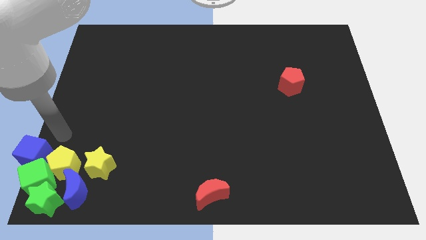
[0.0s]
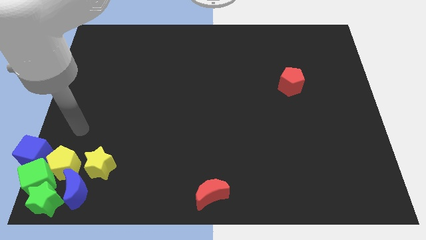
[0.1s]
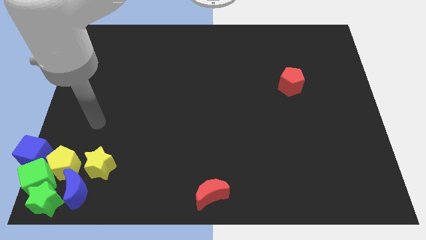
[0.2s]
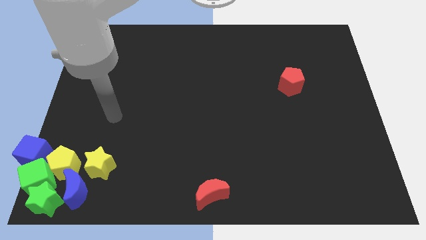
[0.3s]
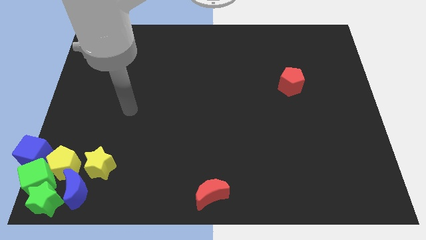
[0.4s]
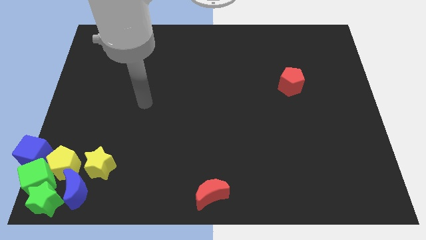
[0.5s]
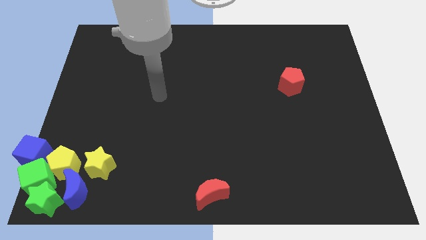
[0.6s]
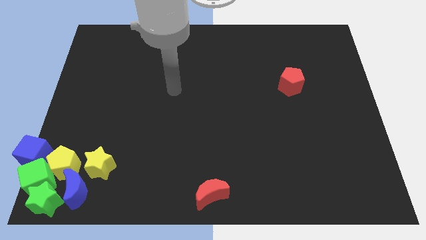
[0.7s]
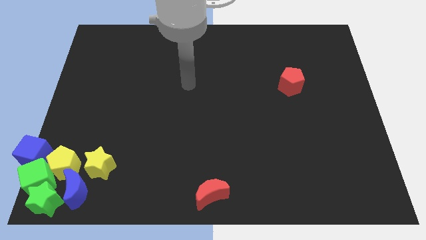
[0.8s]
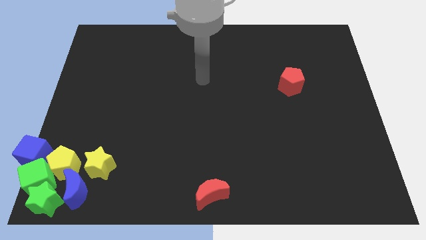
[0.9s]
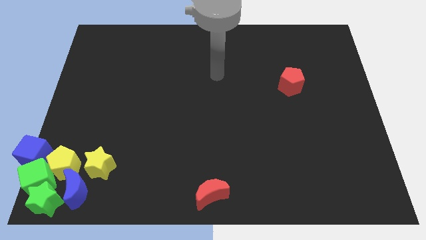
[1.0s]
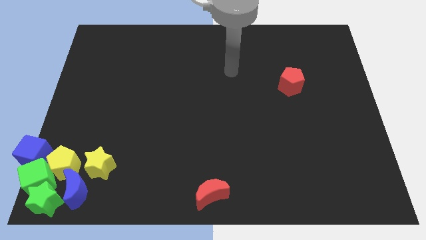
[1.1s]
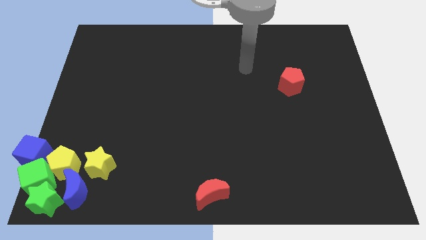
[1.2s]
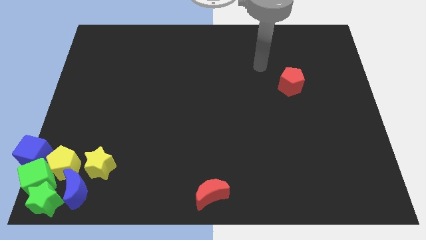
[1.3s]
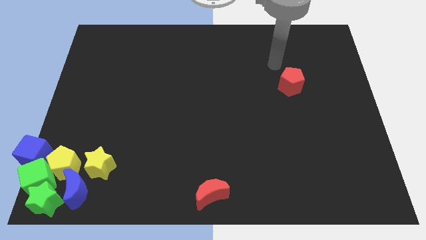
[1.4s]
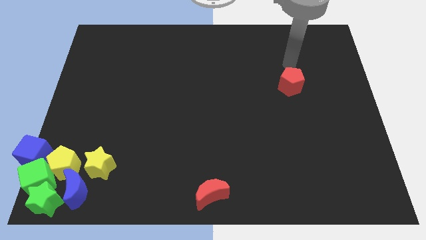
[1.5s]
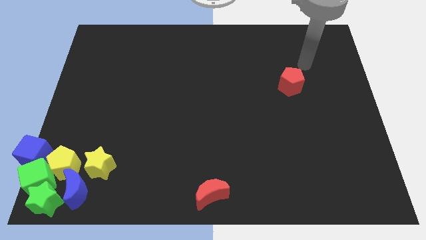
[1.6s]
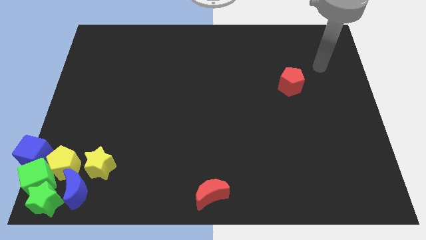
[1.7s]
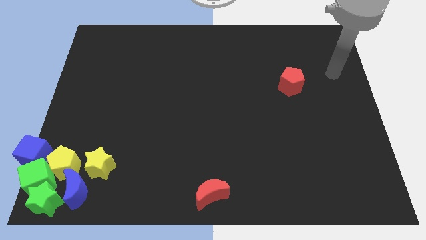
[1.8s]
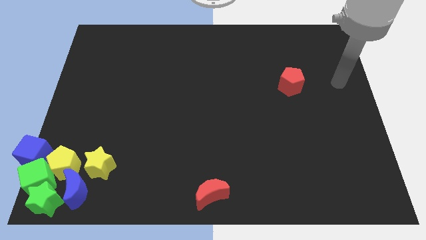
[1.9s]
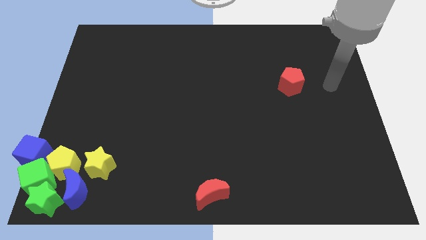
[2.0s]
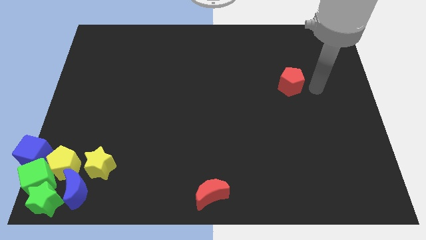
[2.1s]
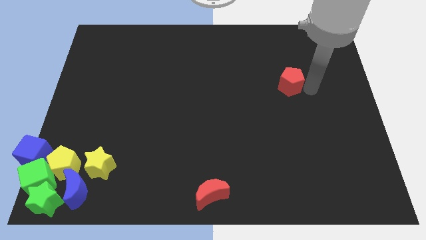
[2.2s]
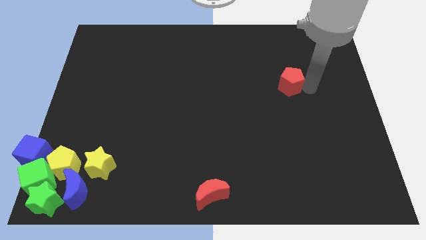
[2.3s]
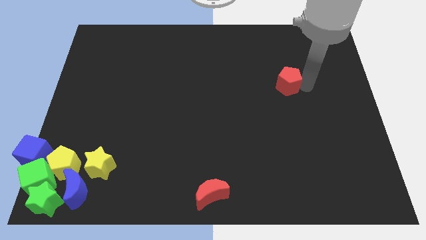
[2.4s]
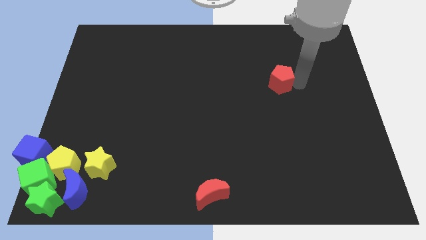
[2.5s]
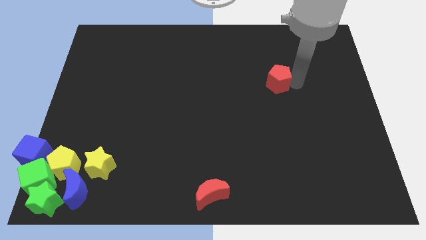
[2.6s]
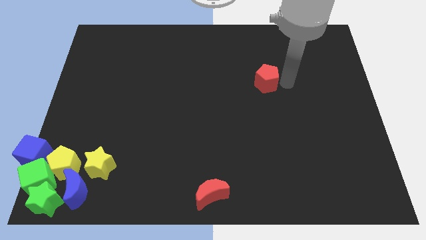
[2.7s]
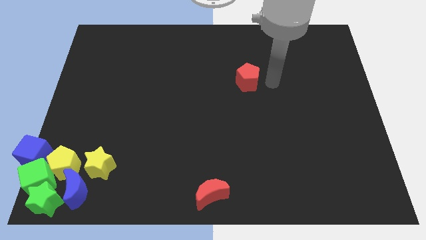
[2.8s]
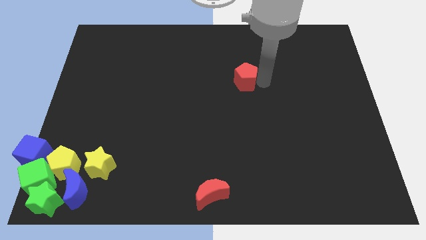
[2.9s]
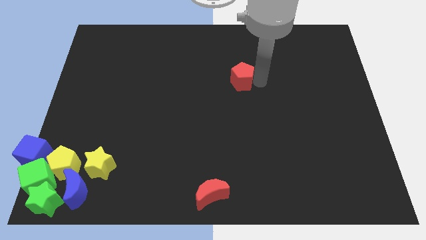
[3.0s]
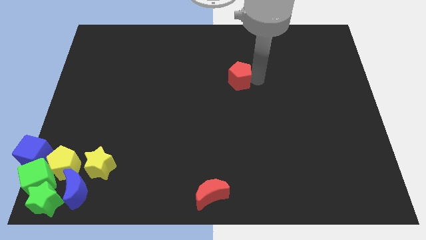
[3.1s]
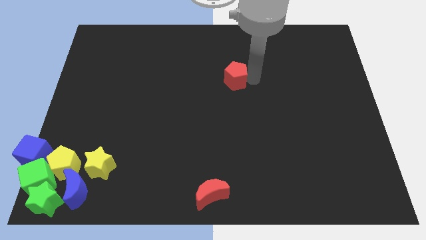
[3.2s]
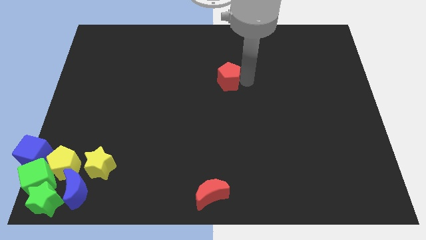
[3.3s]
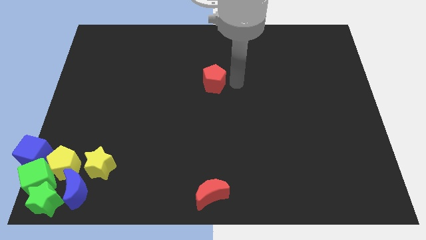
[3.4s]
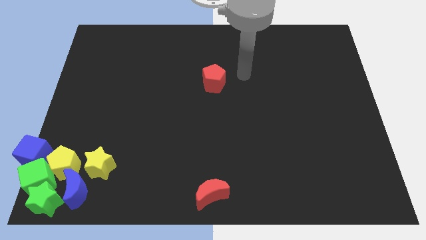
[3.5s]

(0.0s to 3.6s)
slide the red pentagon vertically to the top side of the board

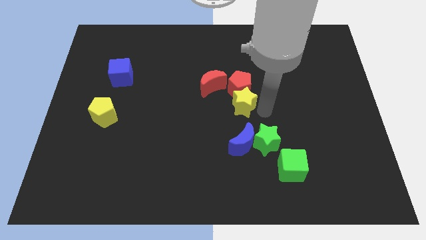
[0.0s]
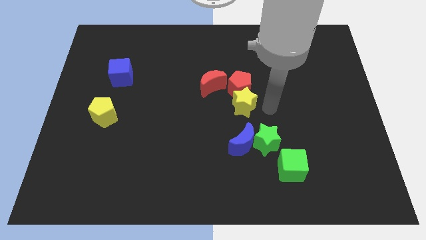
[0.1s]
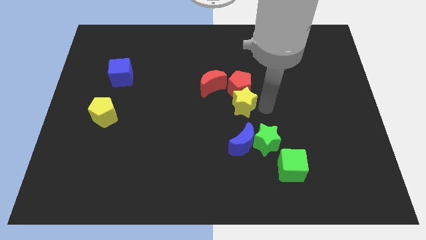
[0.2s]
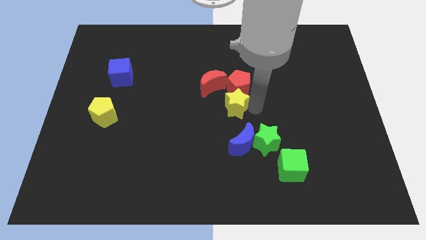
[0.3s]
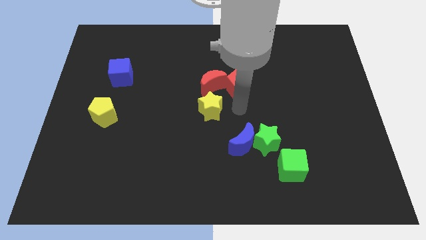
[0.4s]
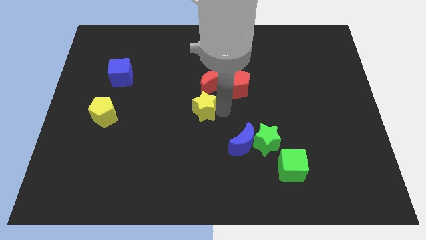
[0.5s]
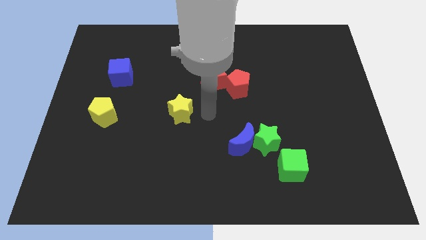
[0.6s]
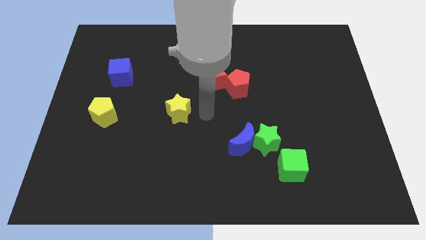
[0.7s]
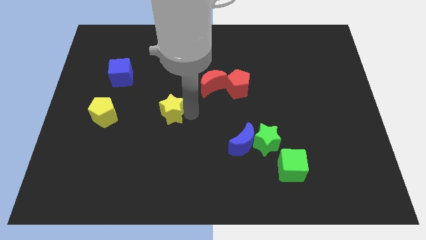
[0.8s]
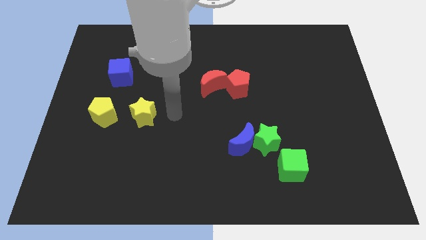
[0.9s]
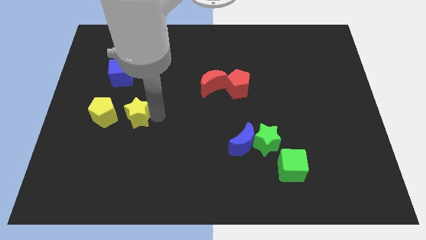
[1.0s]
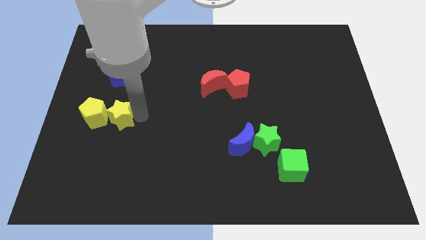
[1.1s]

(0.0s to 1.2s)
move yellow star into the right side of the yellow pentagon

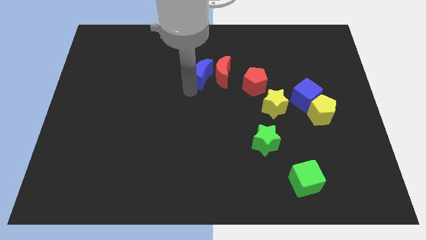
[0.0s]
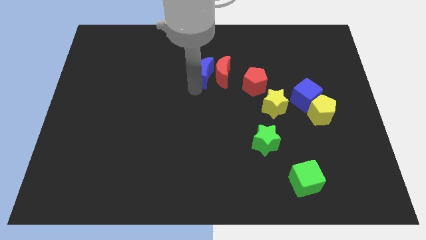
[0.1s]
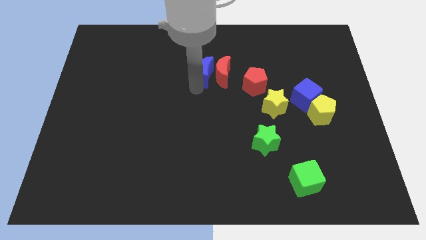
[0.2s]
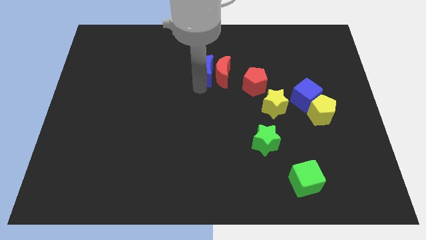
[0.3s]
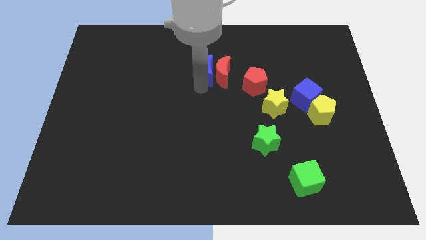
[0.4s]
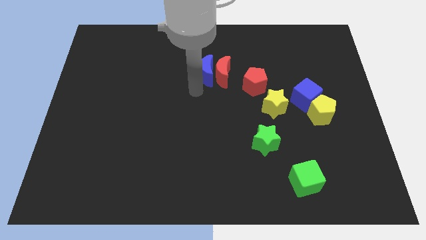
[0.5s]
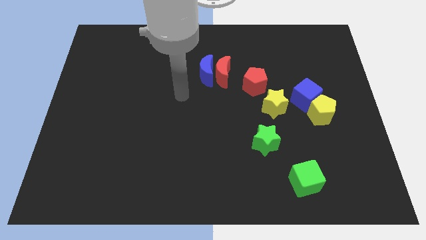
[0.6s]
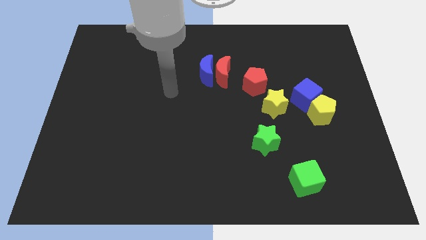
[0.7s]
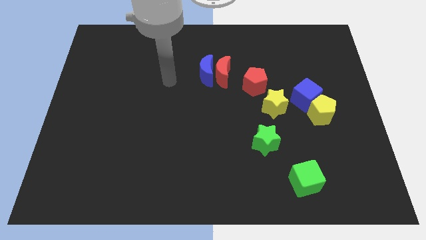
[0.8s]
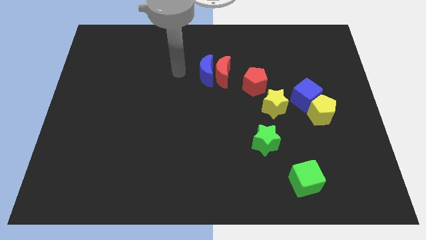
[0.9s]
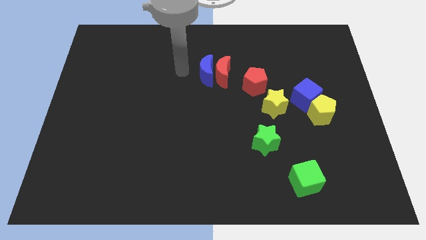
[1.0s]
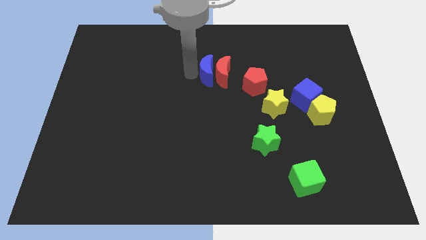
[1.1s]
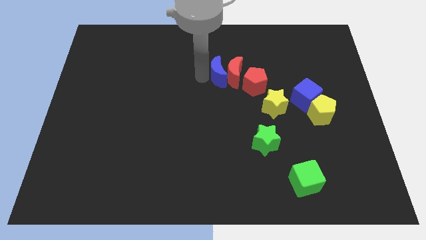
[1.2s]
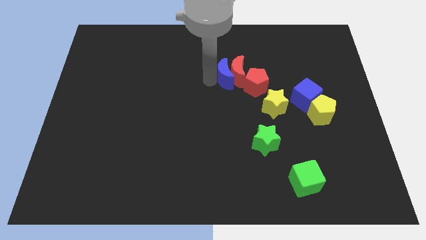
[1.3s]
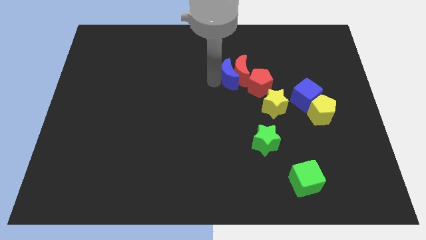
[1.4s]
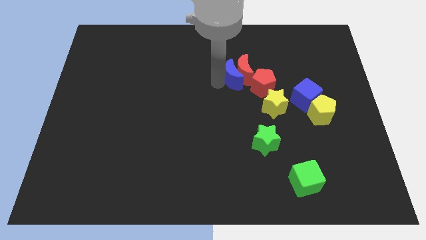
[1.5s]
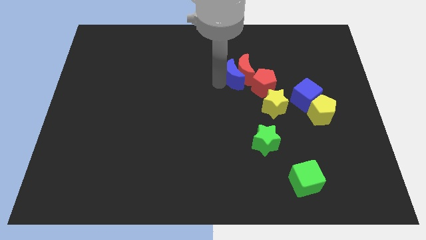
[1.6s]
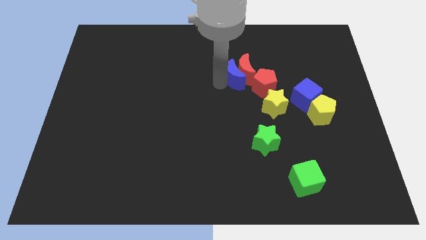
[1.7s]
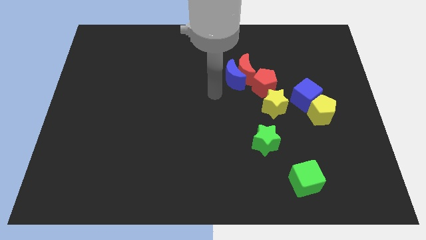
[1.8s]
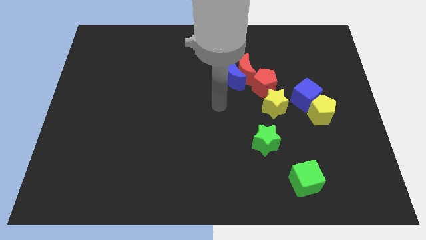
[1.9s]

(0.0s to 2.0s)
push both the crescents into red pentagon

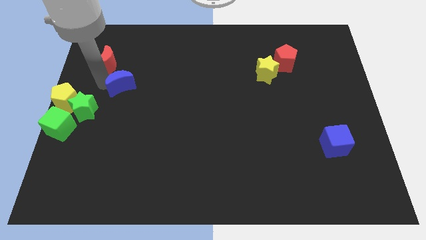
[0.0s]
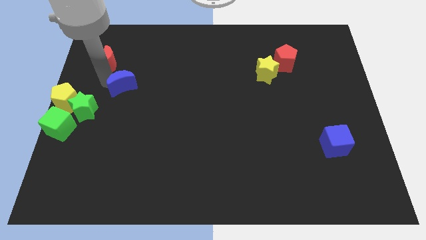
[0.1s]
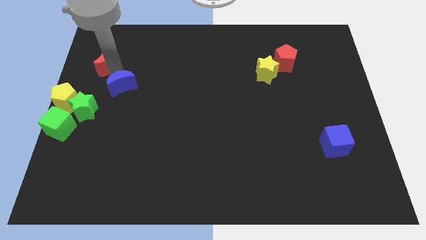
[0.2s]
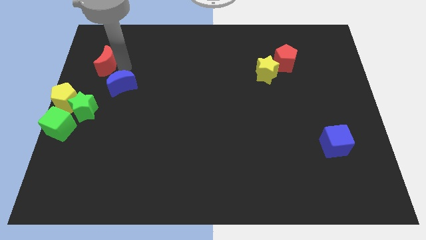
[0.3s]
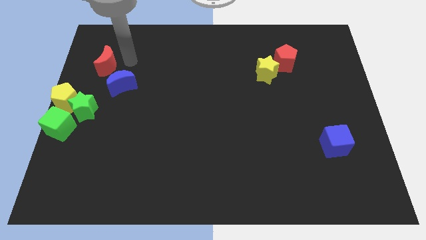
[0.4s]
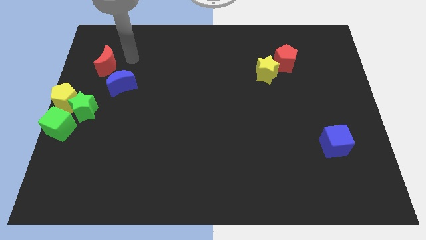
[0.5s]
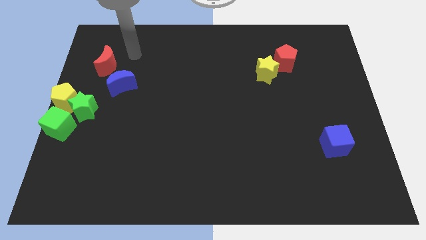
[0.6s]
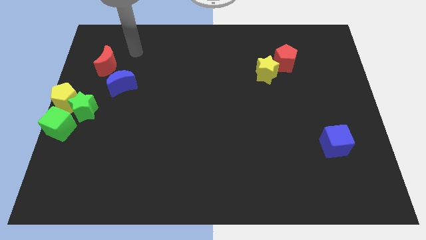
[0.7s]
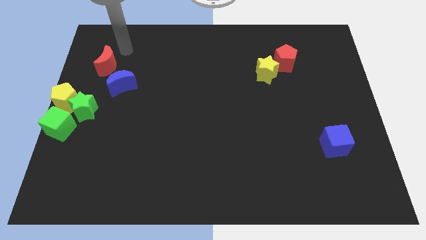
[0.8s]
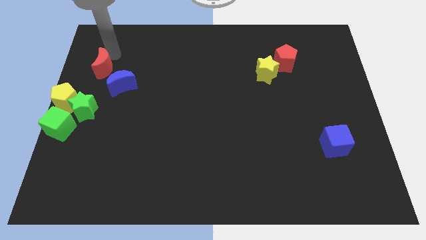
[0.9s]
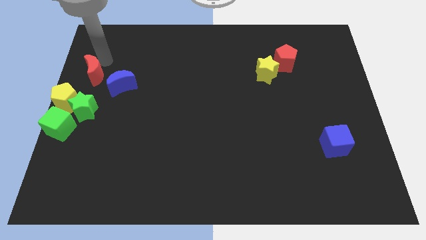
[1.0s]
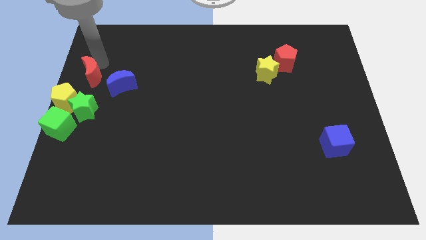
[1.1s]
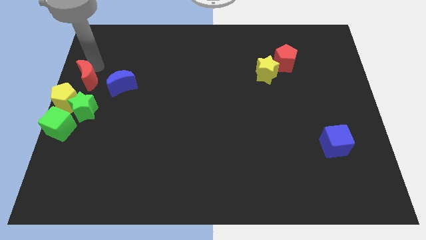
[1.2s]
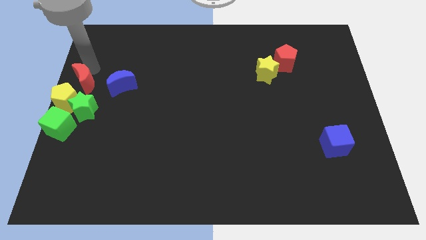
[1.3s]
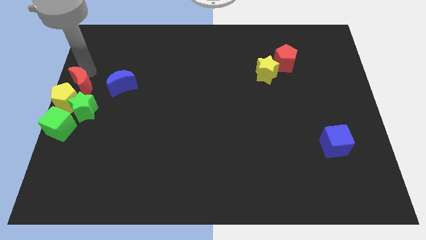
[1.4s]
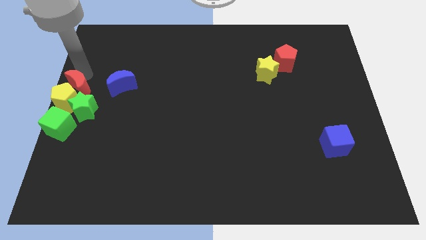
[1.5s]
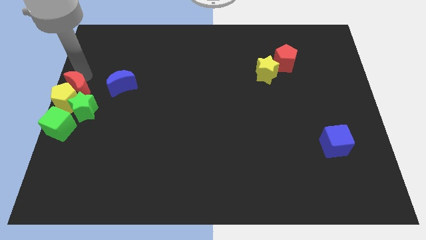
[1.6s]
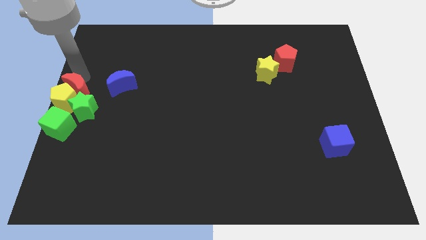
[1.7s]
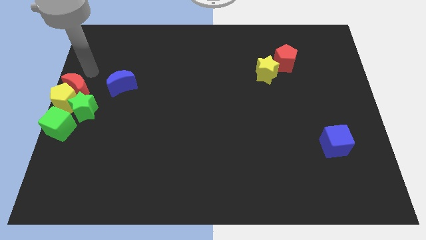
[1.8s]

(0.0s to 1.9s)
push the red moon above the yellow pentagon

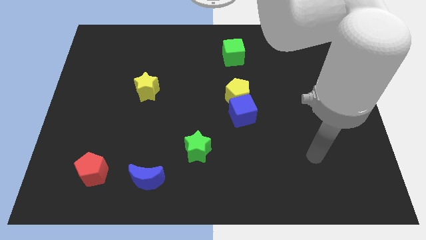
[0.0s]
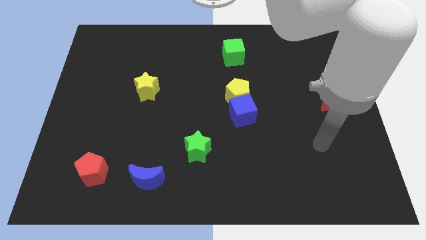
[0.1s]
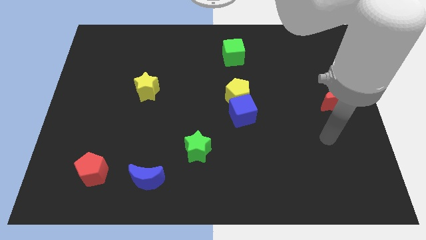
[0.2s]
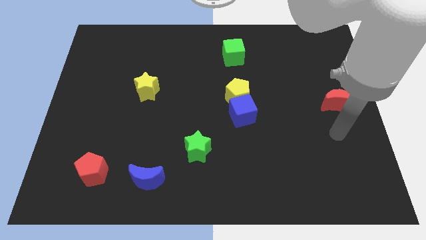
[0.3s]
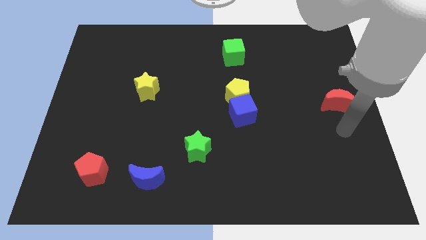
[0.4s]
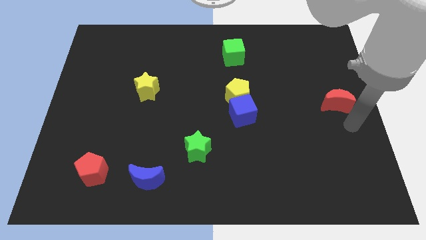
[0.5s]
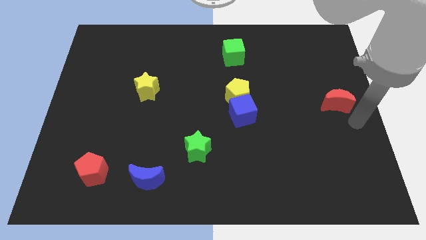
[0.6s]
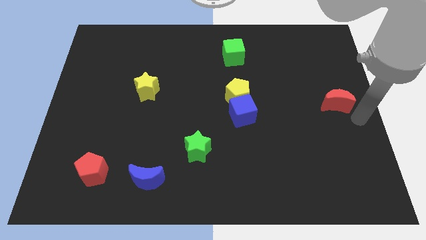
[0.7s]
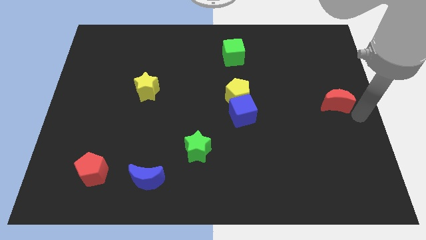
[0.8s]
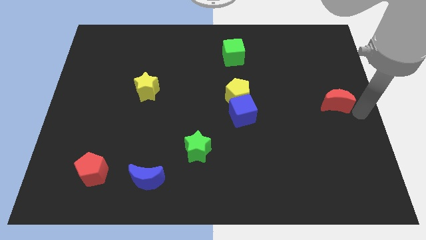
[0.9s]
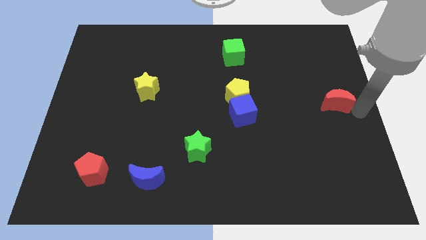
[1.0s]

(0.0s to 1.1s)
place your hand to the right of red moon
